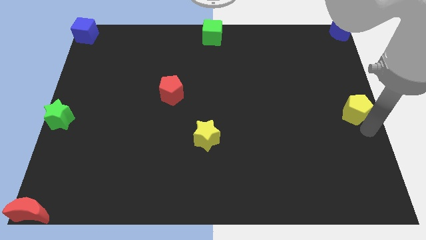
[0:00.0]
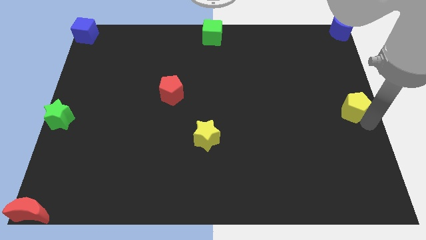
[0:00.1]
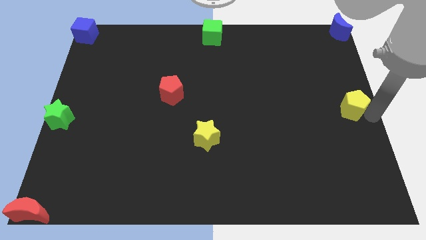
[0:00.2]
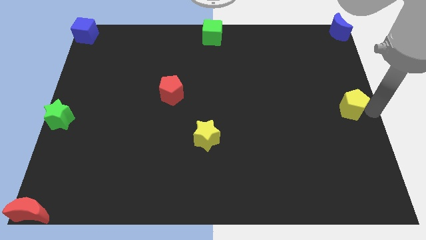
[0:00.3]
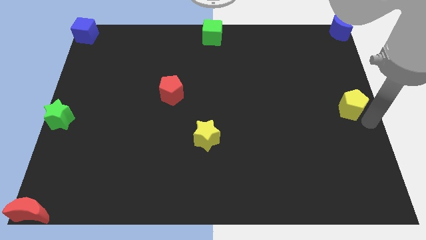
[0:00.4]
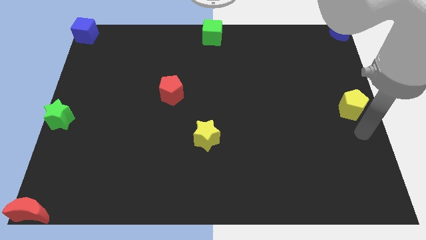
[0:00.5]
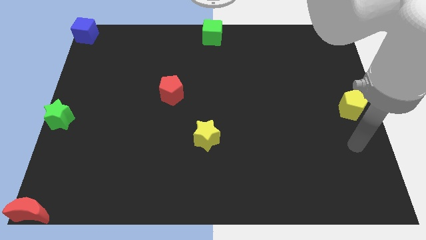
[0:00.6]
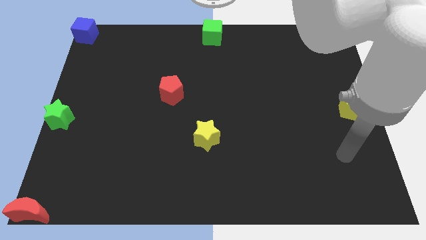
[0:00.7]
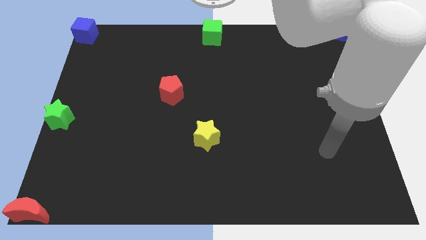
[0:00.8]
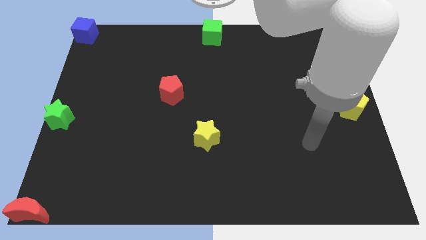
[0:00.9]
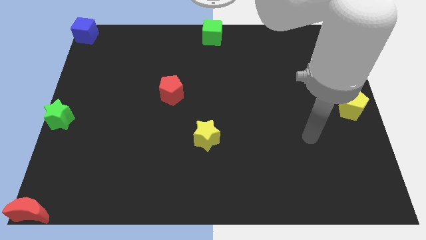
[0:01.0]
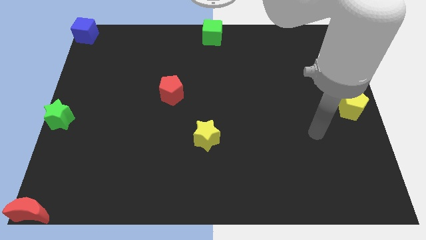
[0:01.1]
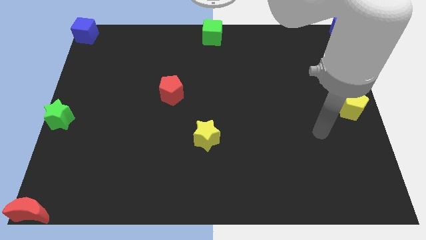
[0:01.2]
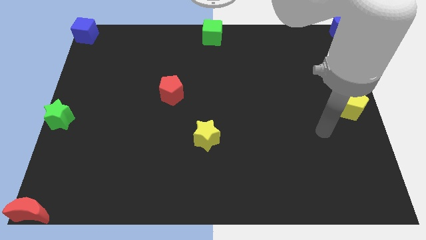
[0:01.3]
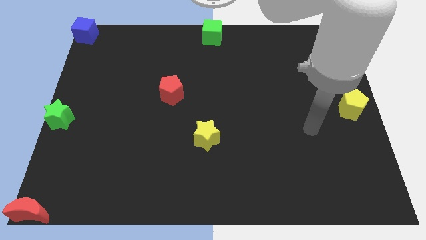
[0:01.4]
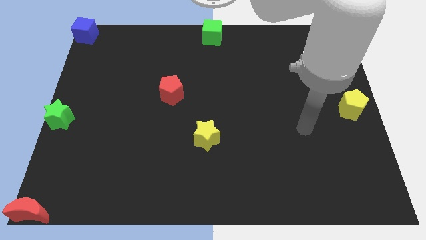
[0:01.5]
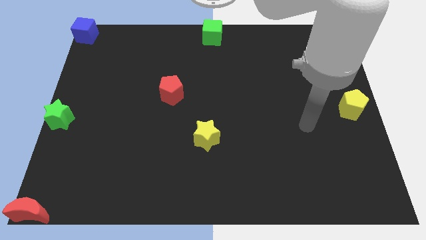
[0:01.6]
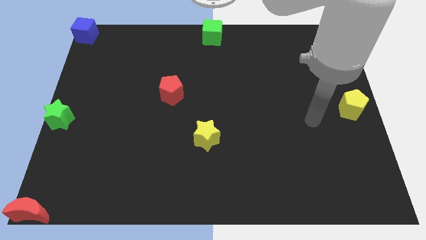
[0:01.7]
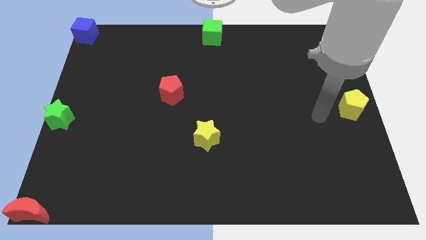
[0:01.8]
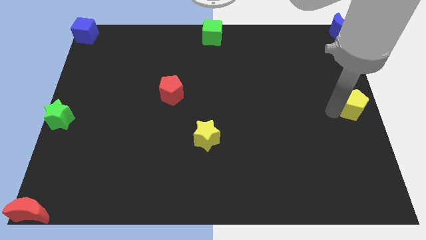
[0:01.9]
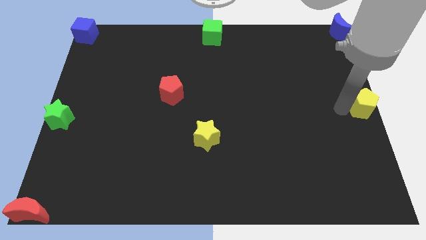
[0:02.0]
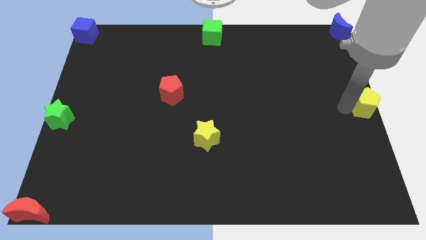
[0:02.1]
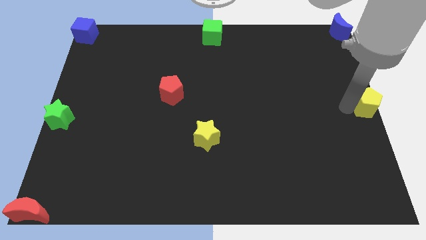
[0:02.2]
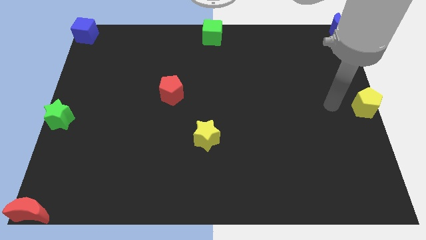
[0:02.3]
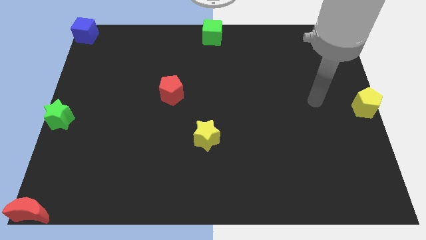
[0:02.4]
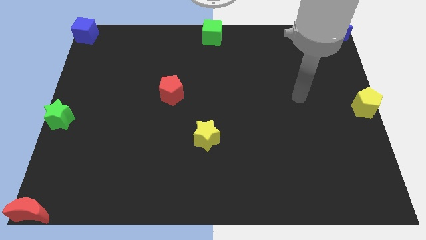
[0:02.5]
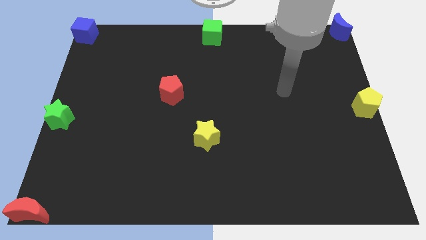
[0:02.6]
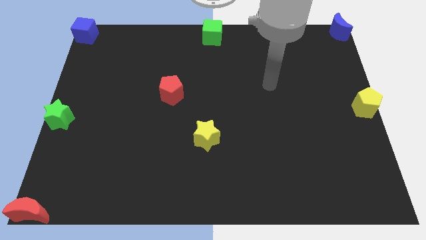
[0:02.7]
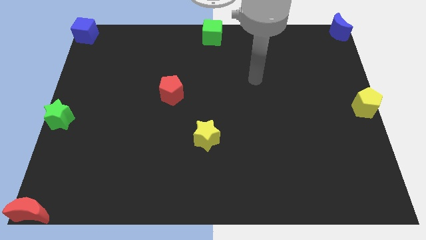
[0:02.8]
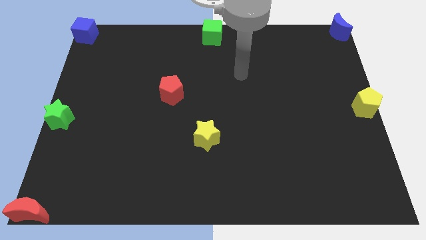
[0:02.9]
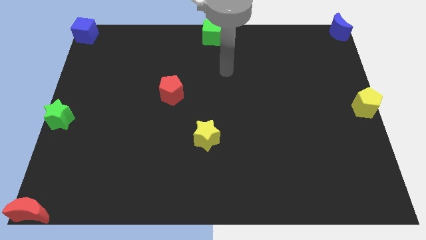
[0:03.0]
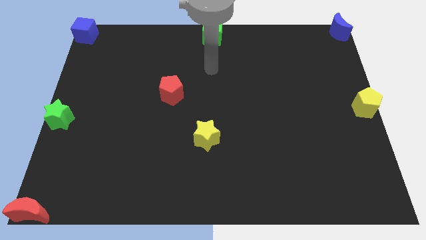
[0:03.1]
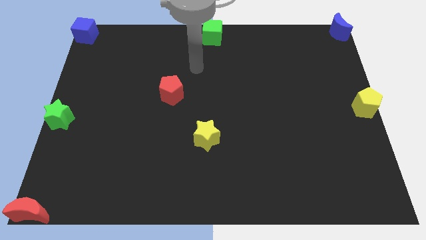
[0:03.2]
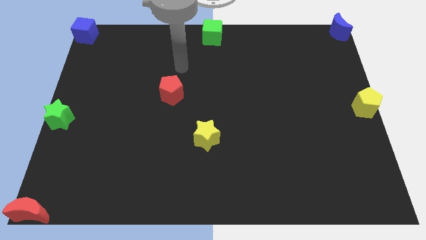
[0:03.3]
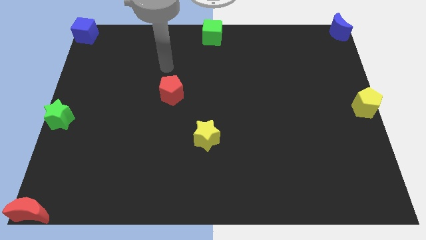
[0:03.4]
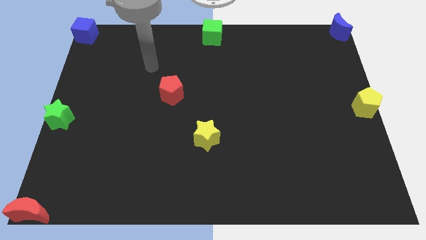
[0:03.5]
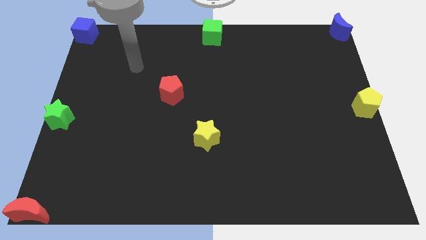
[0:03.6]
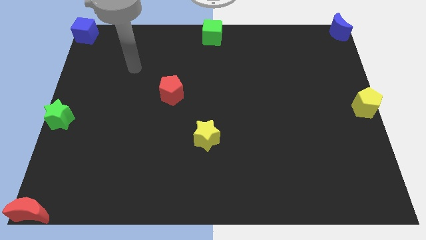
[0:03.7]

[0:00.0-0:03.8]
adjust the yellow pentagon vertically at the bottom of the blue crescent

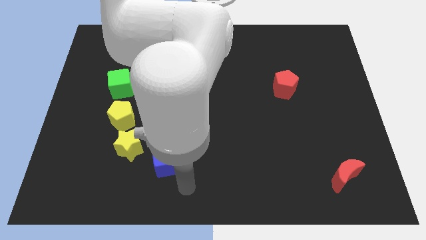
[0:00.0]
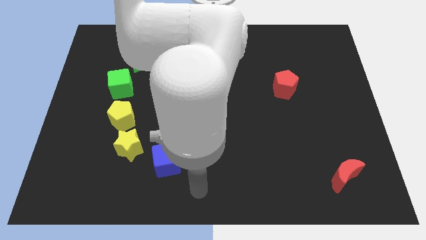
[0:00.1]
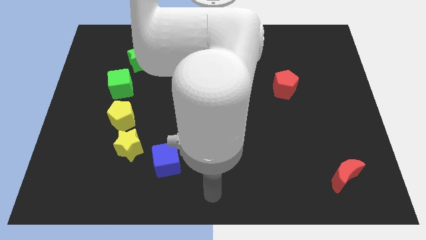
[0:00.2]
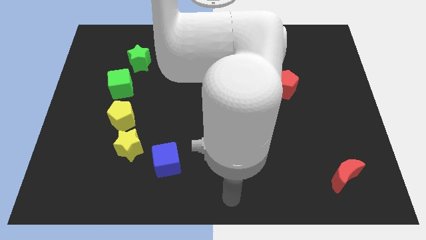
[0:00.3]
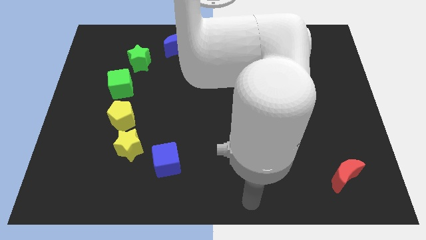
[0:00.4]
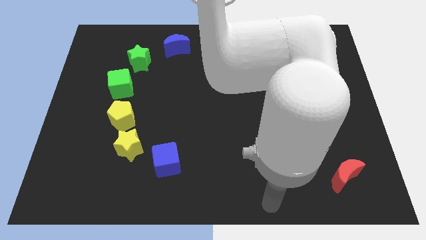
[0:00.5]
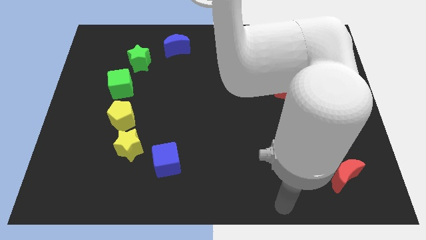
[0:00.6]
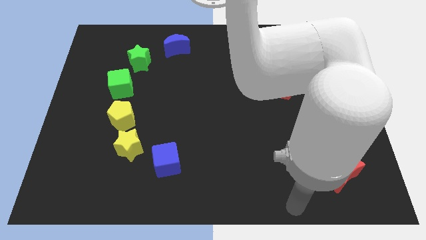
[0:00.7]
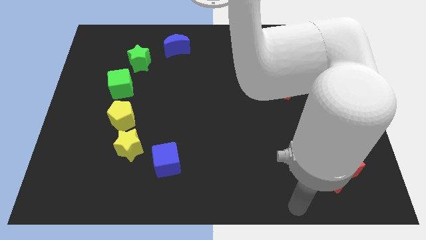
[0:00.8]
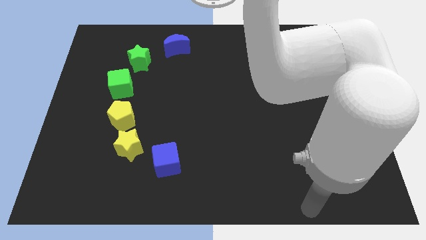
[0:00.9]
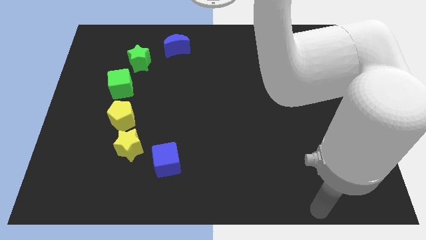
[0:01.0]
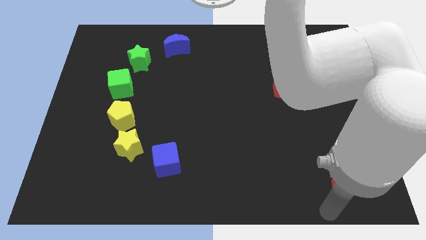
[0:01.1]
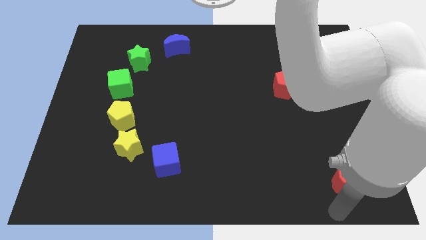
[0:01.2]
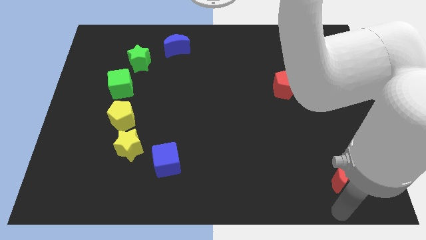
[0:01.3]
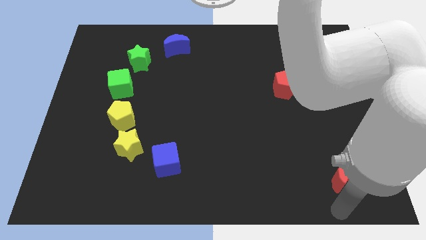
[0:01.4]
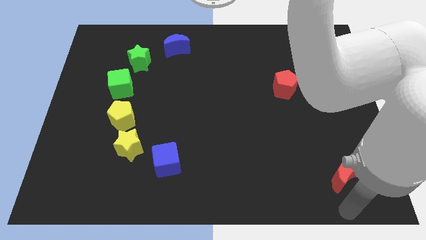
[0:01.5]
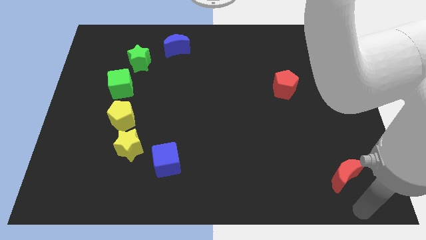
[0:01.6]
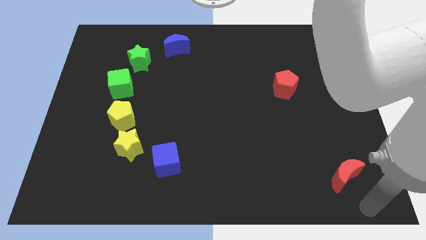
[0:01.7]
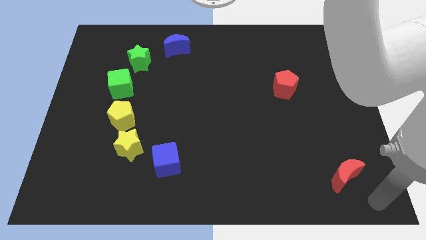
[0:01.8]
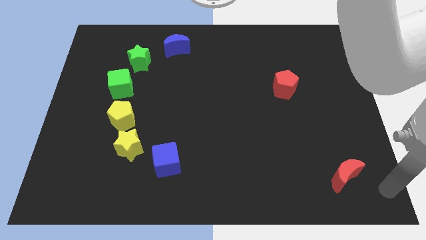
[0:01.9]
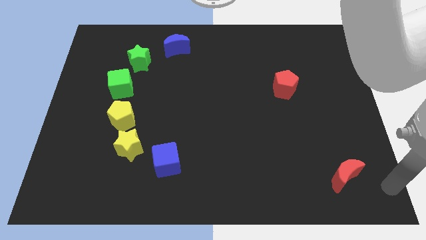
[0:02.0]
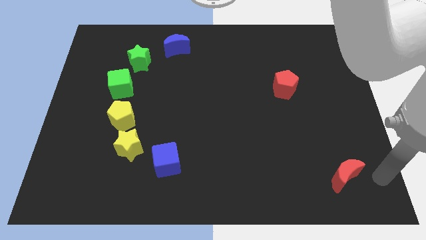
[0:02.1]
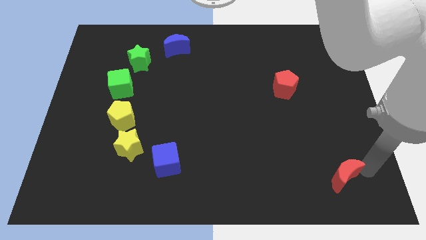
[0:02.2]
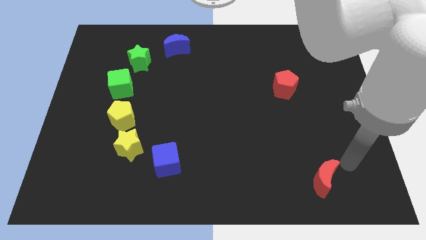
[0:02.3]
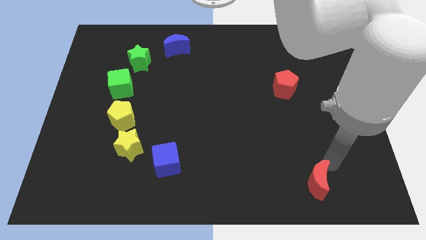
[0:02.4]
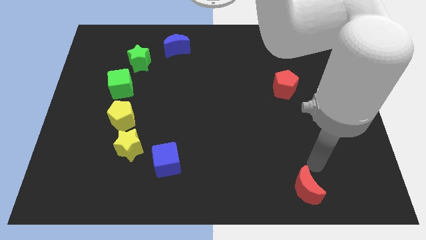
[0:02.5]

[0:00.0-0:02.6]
move arm near red moon

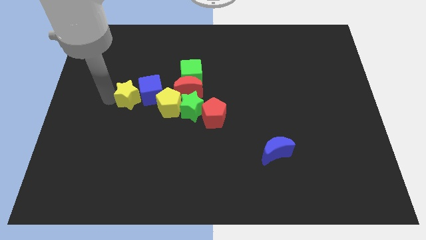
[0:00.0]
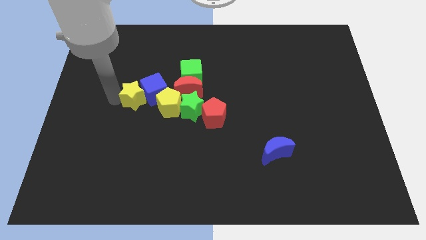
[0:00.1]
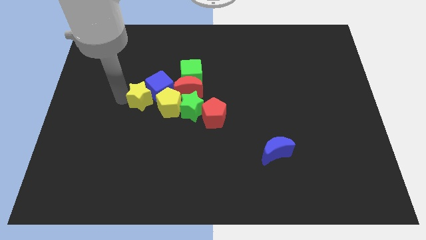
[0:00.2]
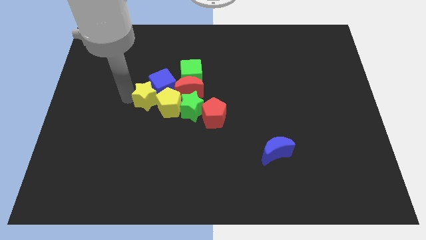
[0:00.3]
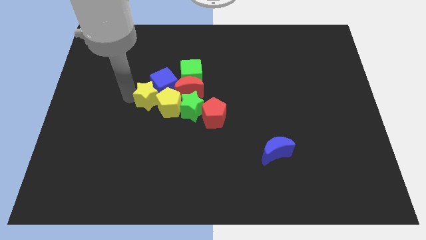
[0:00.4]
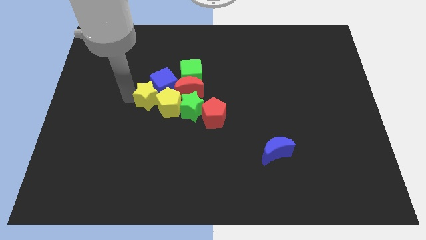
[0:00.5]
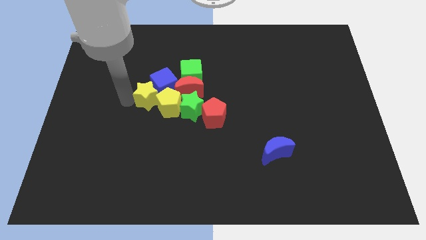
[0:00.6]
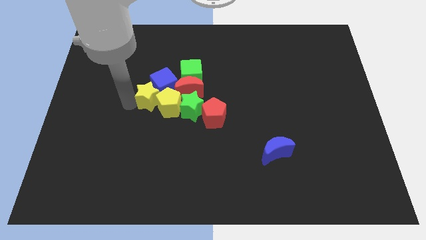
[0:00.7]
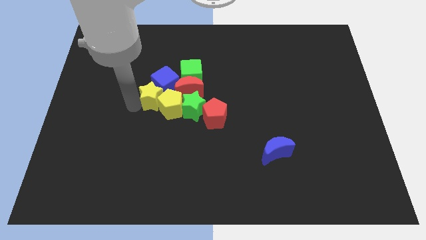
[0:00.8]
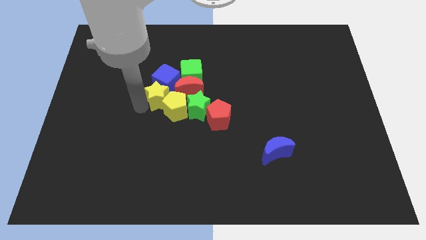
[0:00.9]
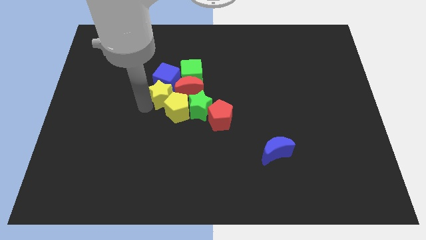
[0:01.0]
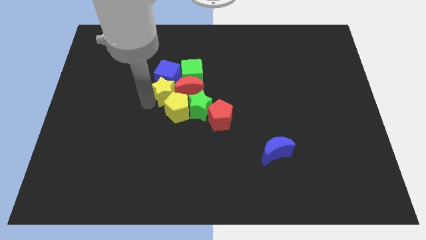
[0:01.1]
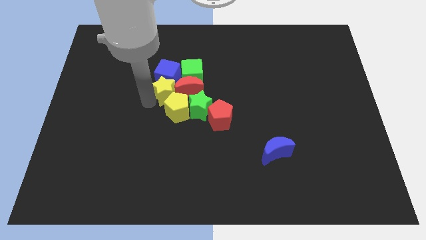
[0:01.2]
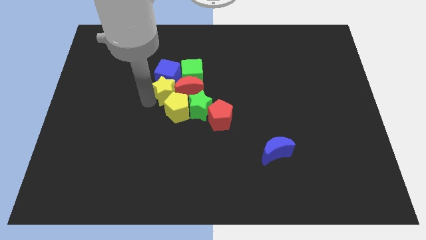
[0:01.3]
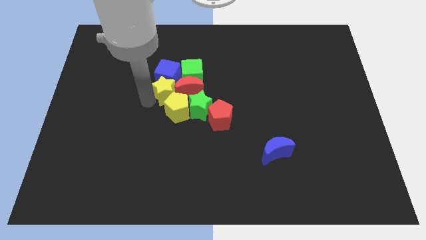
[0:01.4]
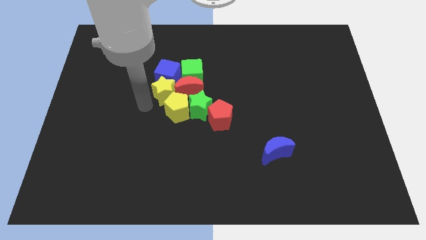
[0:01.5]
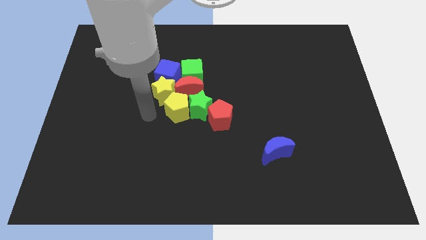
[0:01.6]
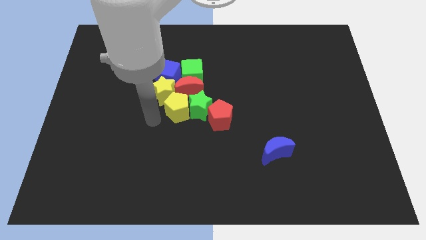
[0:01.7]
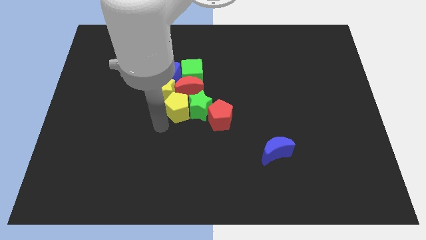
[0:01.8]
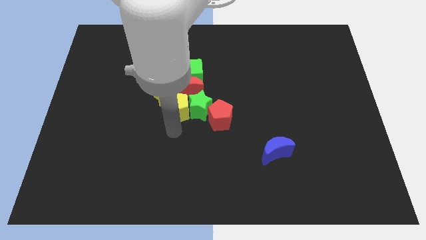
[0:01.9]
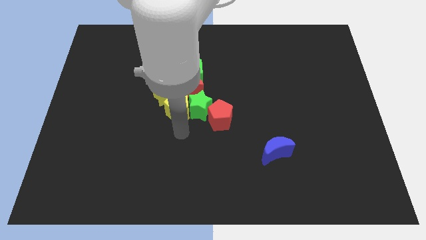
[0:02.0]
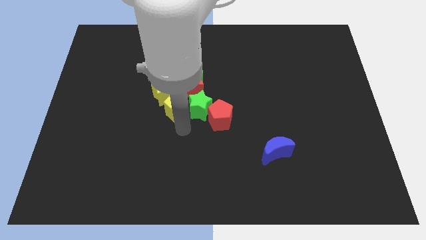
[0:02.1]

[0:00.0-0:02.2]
push the yellow star left to the red moon

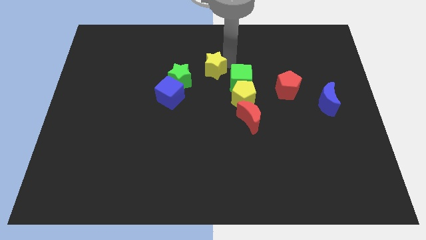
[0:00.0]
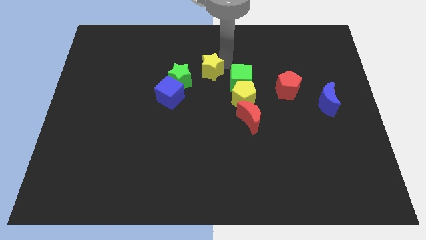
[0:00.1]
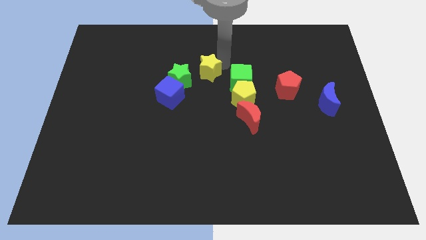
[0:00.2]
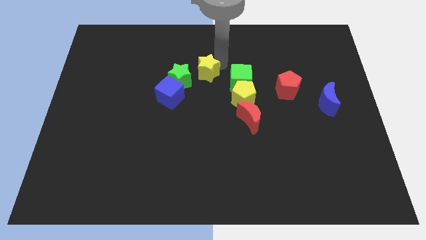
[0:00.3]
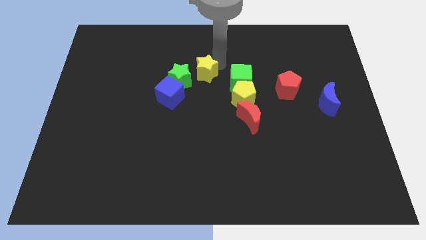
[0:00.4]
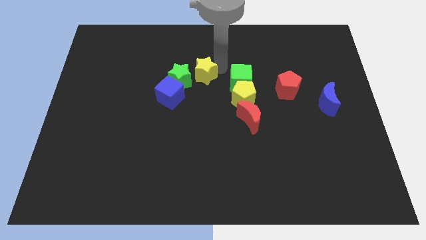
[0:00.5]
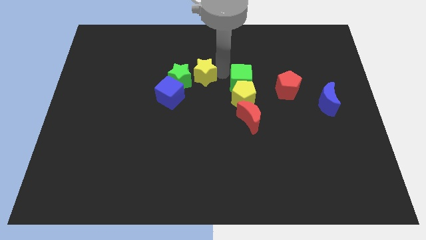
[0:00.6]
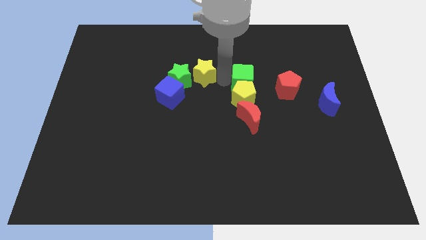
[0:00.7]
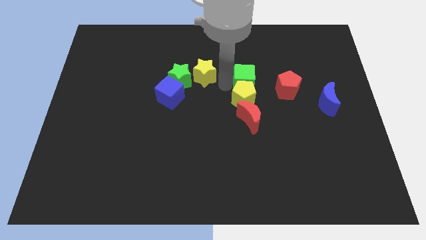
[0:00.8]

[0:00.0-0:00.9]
place yellow star to the right of green star
